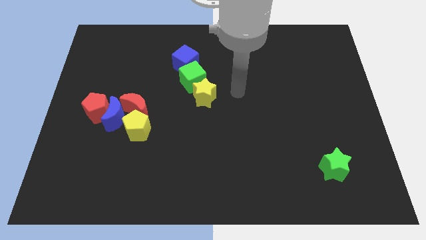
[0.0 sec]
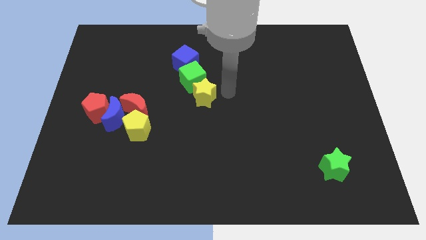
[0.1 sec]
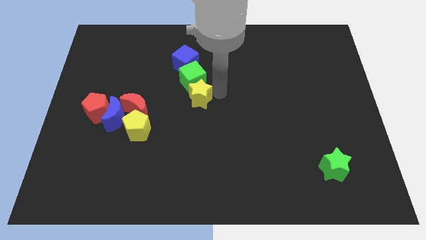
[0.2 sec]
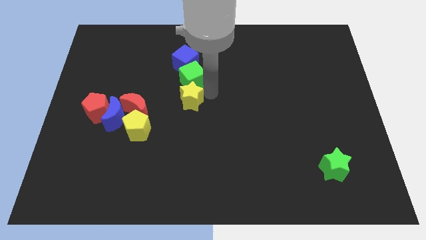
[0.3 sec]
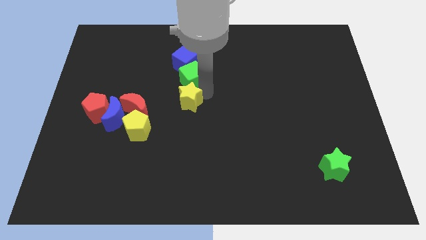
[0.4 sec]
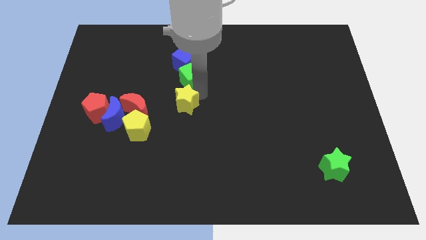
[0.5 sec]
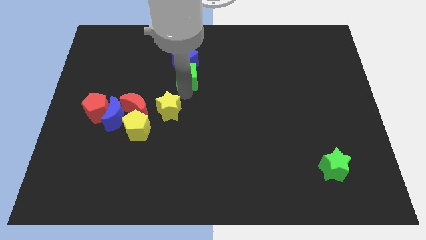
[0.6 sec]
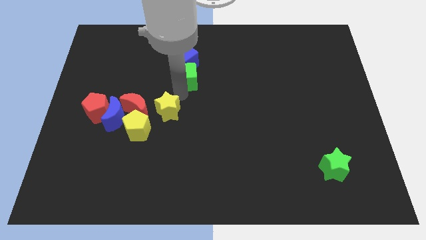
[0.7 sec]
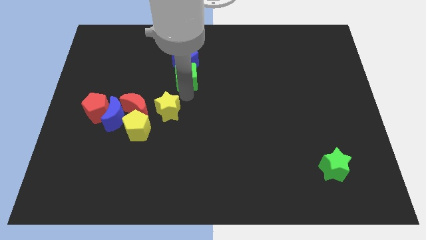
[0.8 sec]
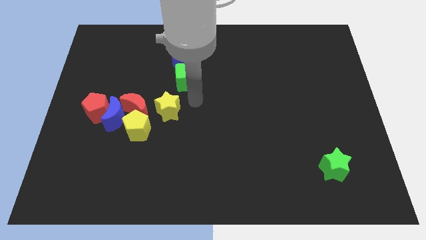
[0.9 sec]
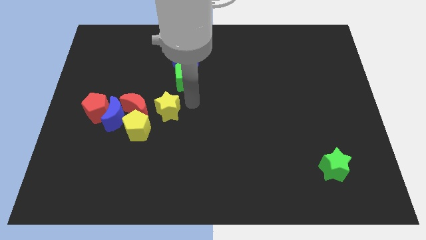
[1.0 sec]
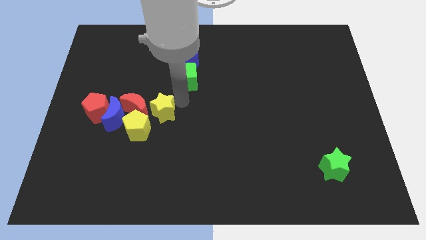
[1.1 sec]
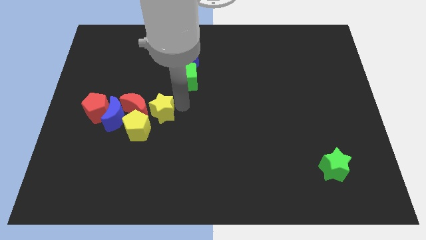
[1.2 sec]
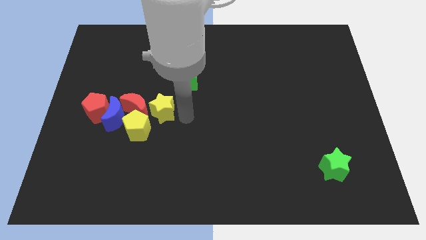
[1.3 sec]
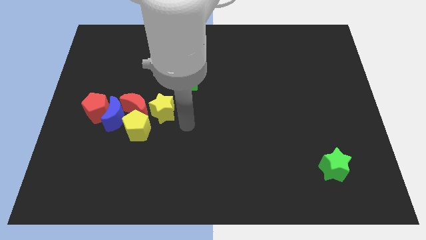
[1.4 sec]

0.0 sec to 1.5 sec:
push the yellow star to the right of the red moon

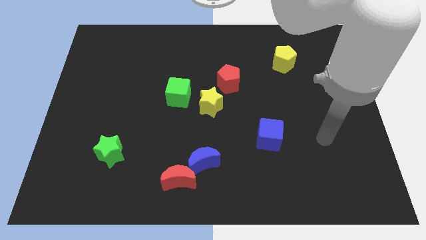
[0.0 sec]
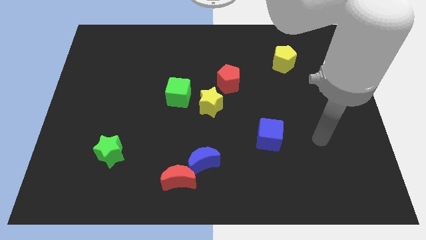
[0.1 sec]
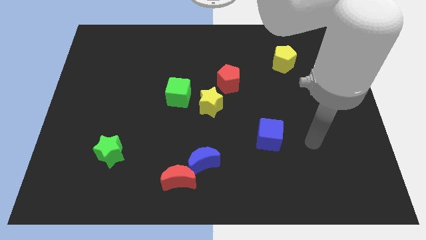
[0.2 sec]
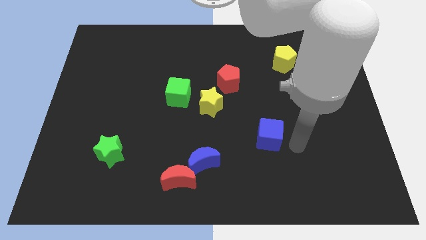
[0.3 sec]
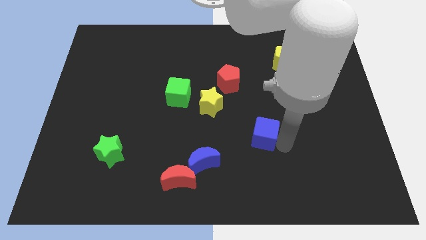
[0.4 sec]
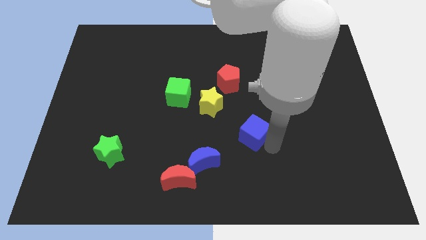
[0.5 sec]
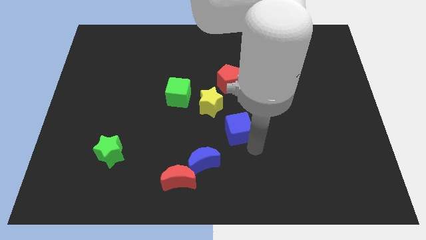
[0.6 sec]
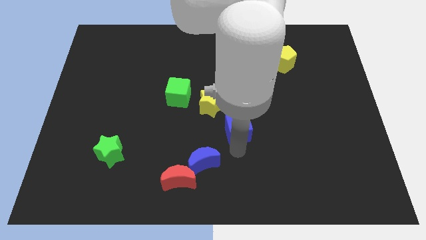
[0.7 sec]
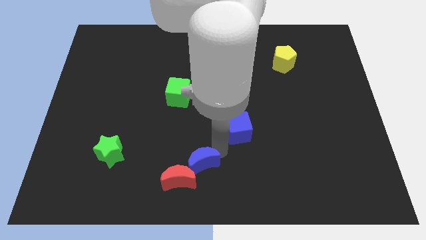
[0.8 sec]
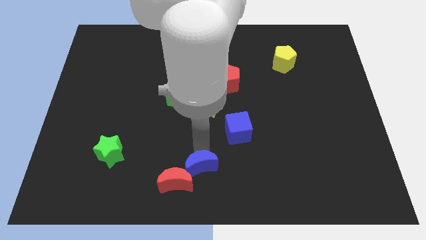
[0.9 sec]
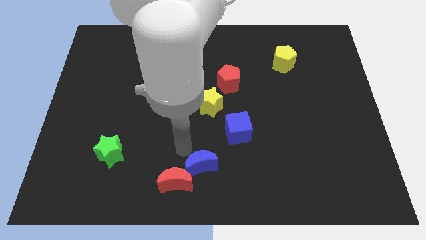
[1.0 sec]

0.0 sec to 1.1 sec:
push the blue cube slightly to the left of the board

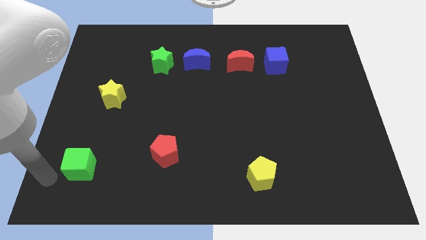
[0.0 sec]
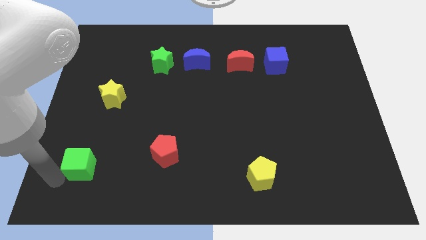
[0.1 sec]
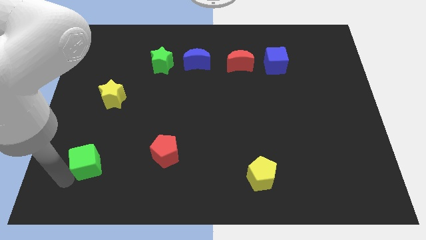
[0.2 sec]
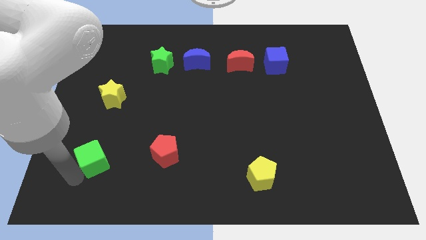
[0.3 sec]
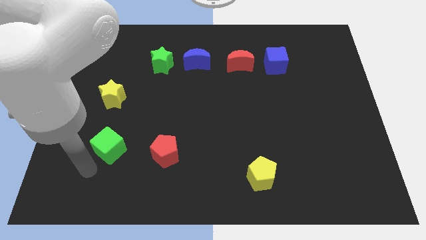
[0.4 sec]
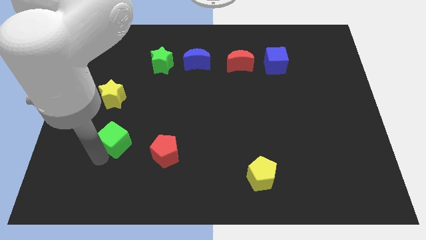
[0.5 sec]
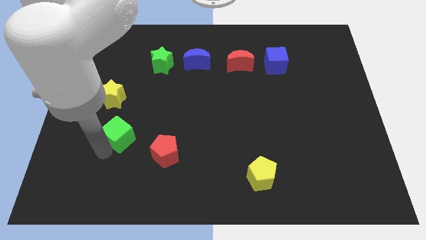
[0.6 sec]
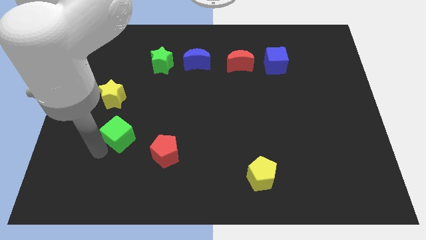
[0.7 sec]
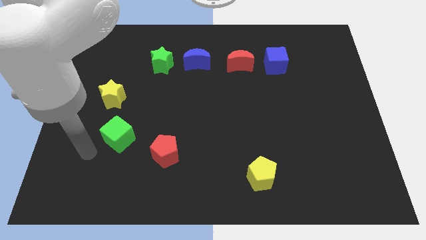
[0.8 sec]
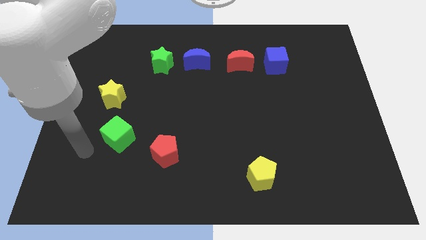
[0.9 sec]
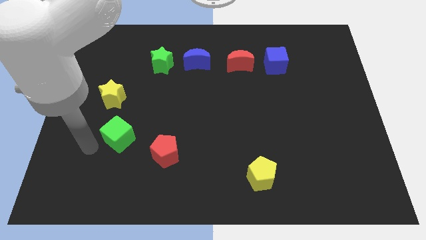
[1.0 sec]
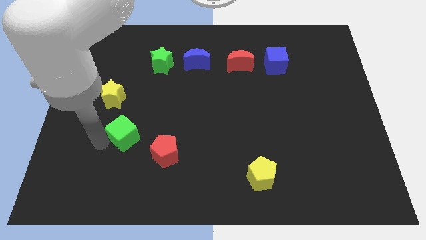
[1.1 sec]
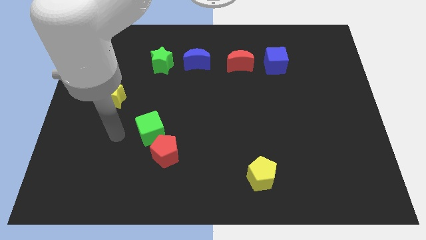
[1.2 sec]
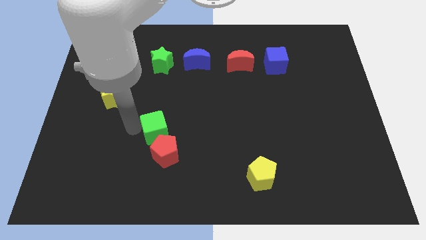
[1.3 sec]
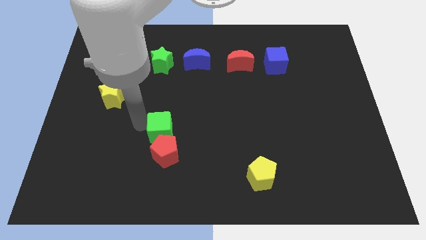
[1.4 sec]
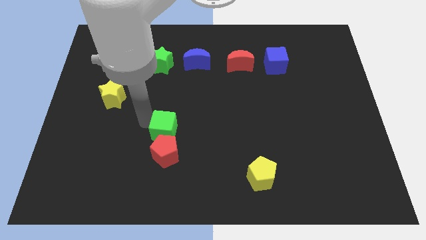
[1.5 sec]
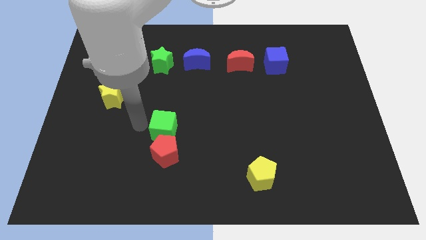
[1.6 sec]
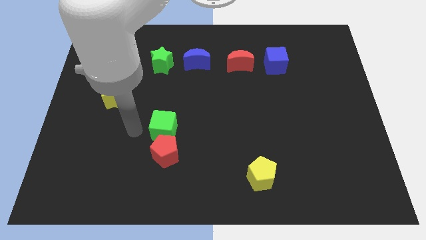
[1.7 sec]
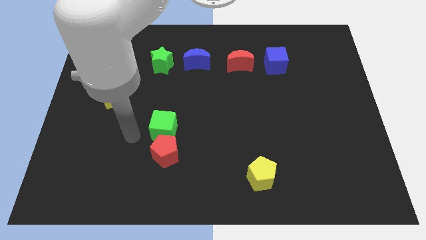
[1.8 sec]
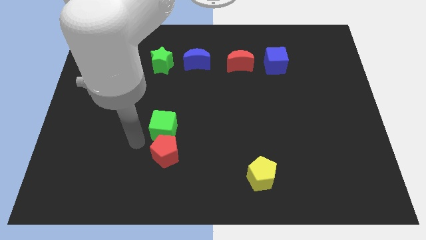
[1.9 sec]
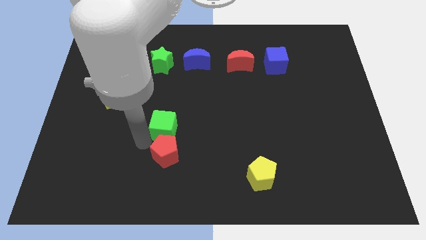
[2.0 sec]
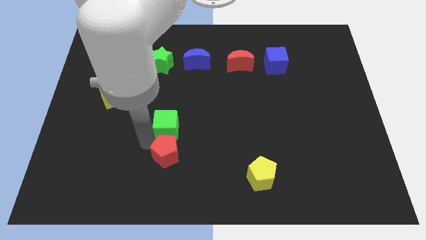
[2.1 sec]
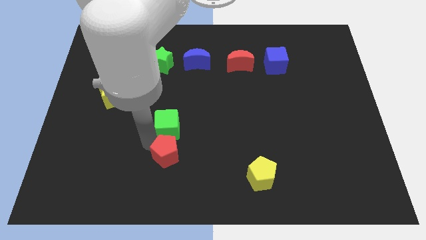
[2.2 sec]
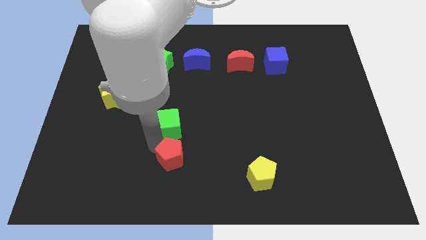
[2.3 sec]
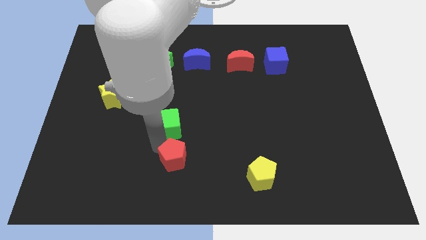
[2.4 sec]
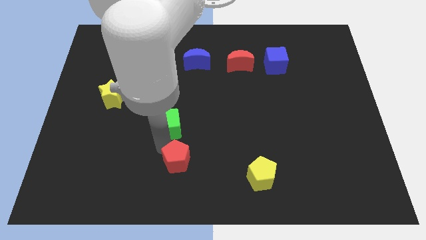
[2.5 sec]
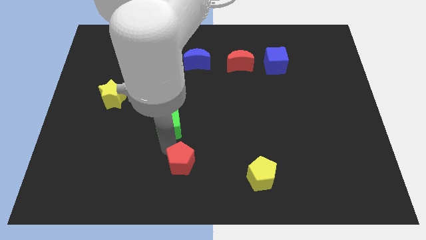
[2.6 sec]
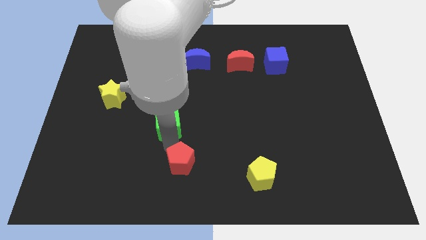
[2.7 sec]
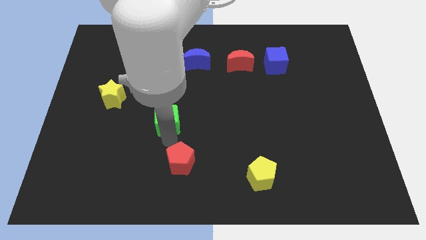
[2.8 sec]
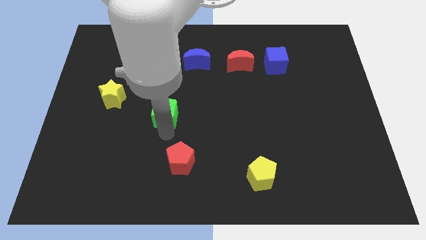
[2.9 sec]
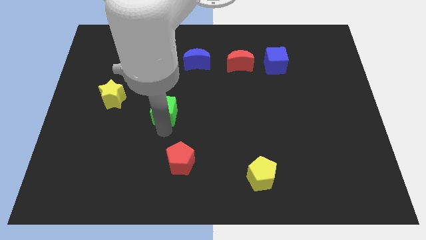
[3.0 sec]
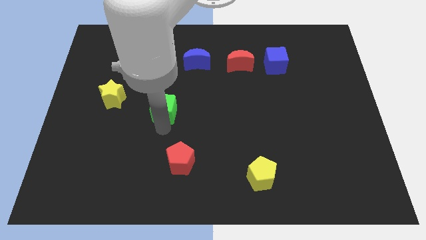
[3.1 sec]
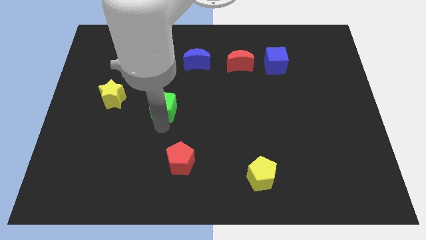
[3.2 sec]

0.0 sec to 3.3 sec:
move the green cube towards the center of the board

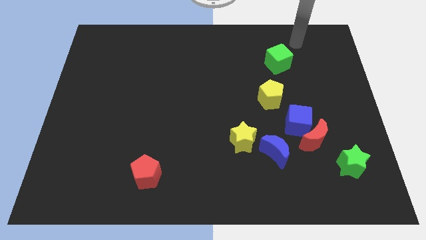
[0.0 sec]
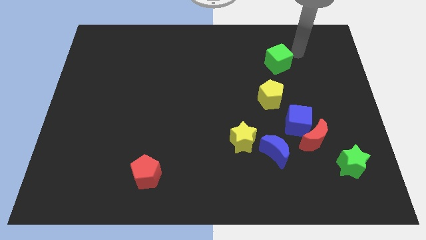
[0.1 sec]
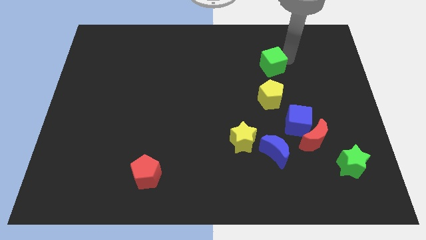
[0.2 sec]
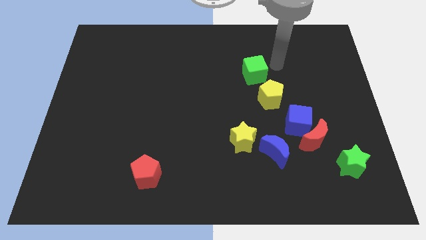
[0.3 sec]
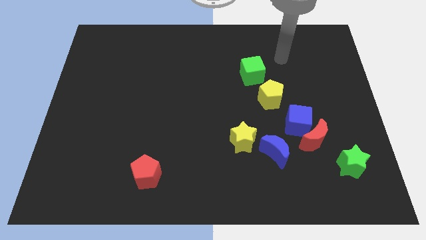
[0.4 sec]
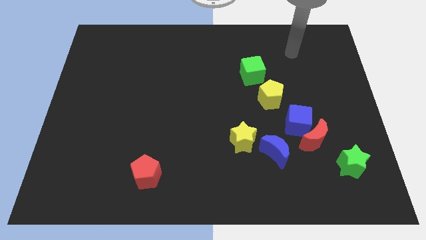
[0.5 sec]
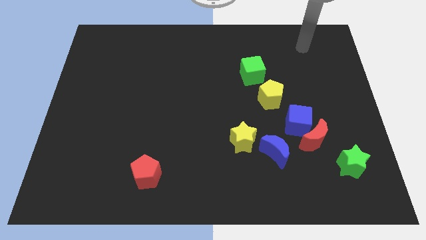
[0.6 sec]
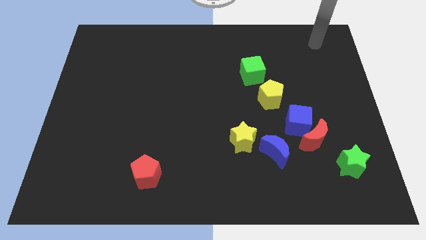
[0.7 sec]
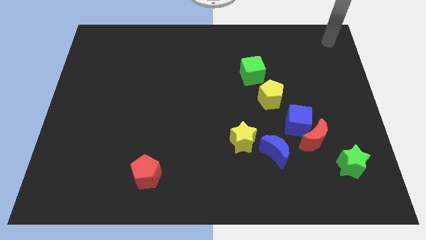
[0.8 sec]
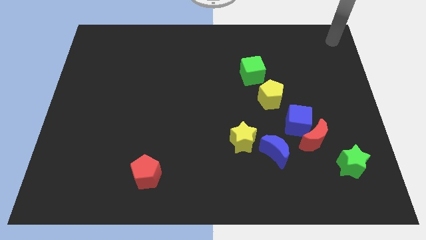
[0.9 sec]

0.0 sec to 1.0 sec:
slightly push the green cube to the left of the board

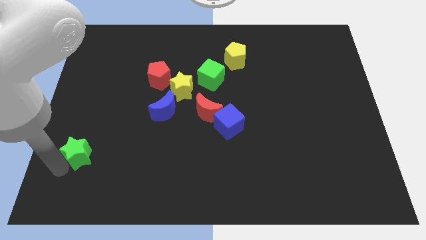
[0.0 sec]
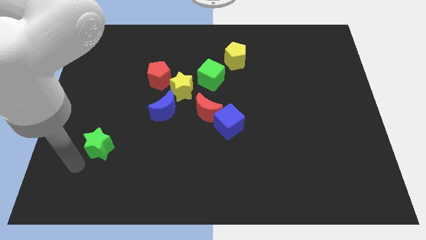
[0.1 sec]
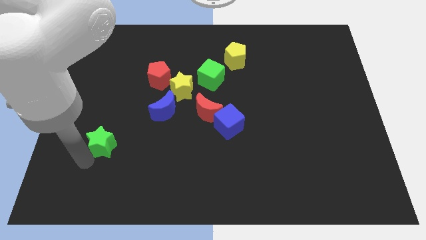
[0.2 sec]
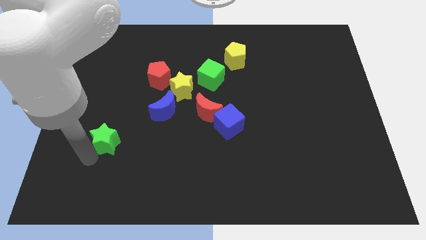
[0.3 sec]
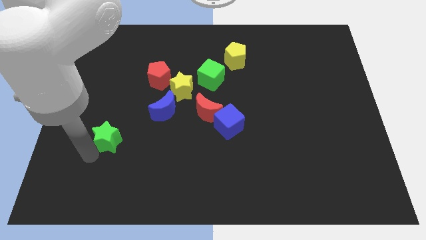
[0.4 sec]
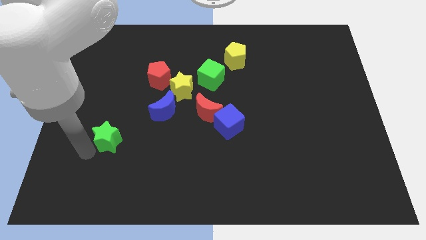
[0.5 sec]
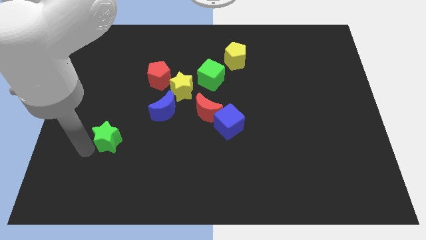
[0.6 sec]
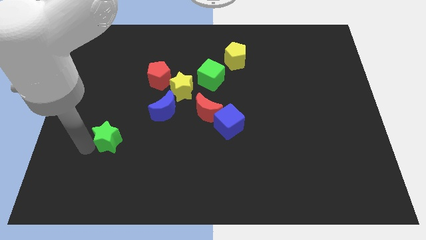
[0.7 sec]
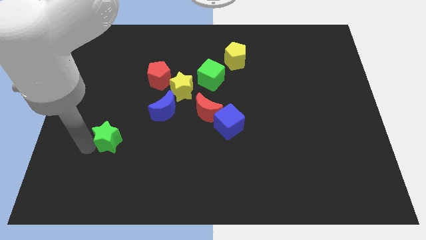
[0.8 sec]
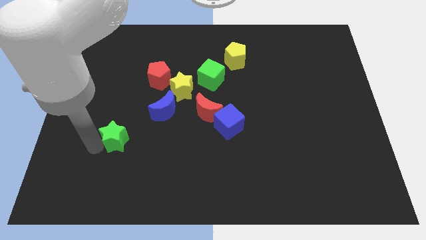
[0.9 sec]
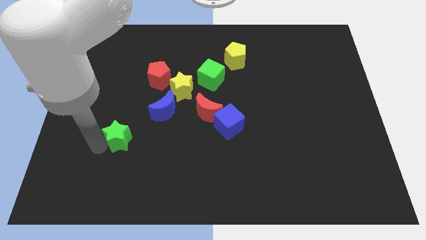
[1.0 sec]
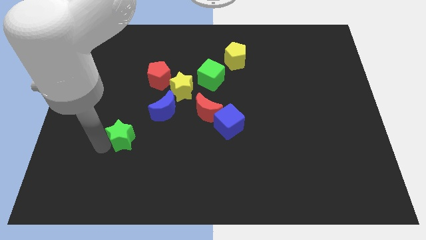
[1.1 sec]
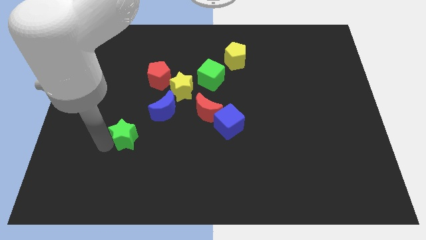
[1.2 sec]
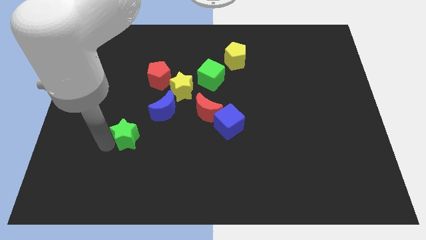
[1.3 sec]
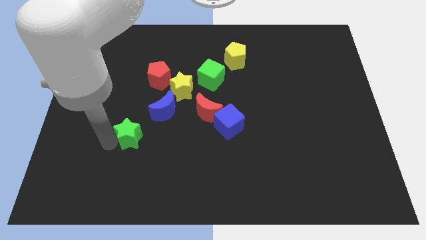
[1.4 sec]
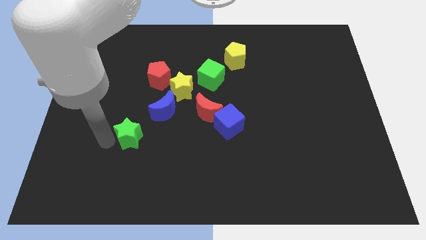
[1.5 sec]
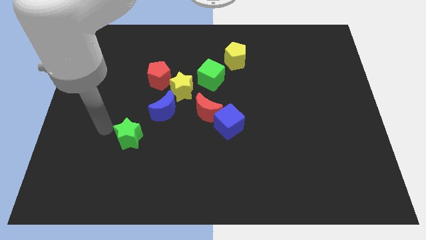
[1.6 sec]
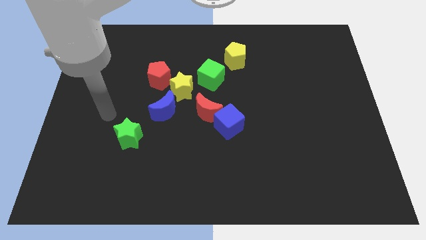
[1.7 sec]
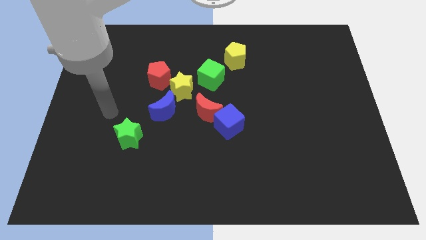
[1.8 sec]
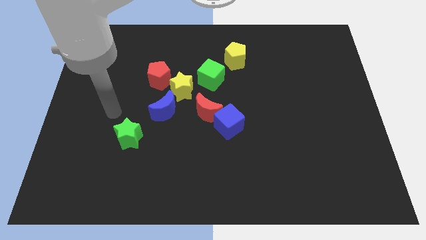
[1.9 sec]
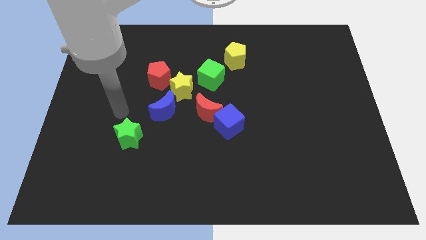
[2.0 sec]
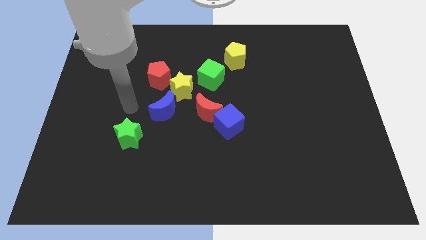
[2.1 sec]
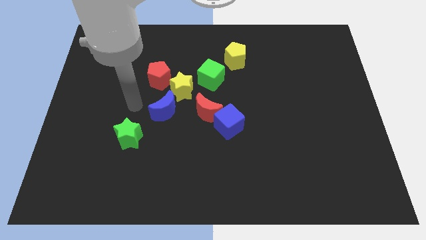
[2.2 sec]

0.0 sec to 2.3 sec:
slide the green star towards the blue moon
